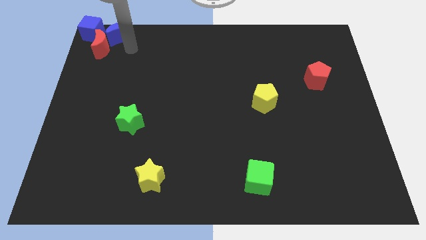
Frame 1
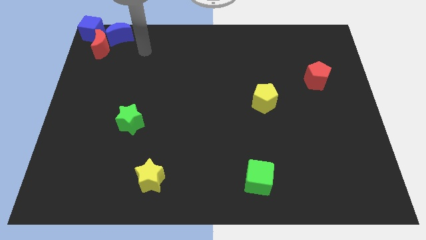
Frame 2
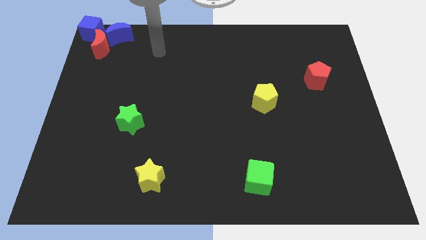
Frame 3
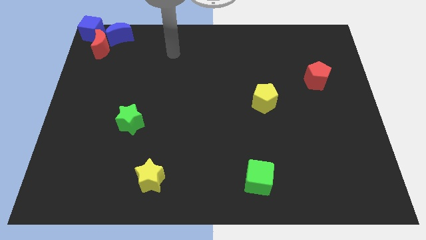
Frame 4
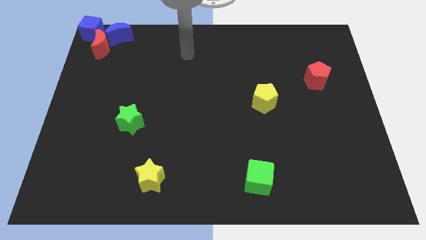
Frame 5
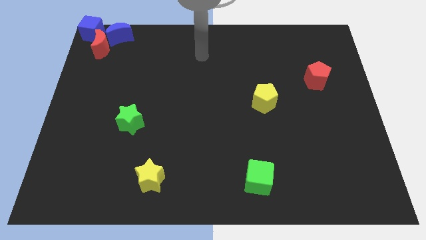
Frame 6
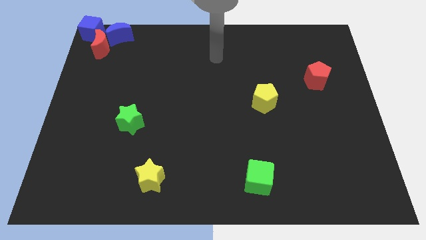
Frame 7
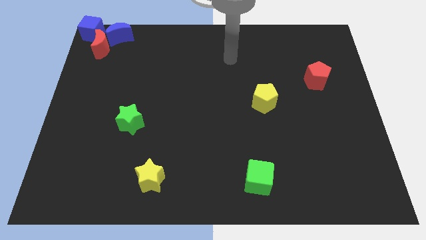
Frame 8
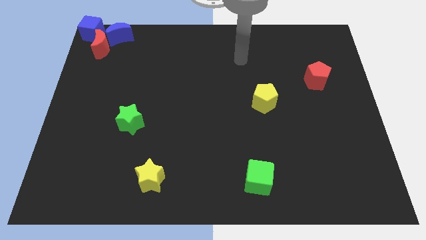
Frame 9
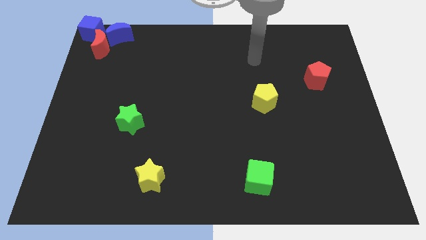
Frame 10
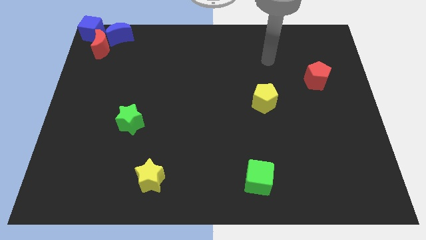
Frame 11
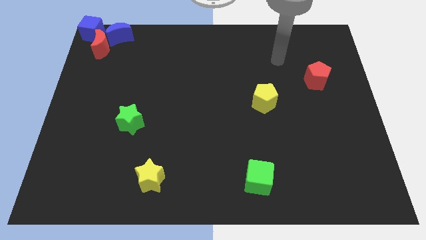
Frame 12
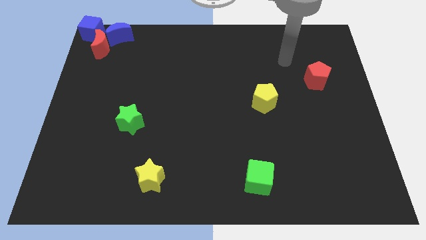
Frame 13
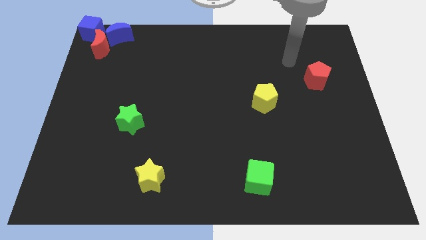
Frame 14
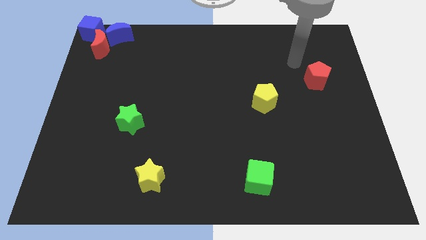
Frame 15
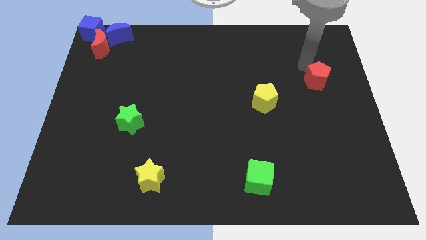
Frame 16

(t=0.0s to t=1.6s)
move the arm towards the red pentagon

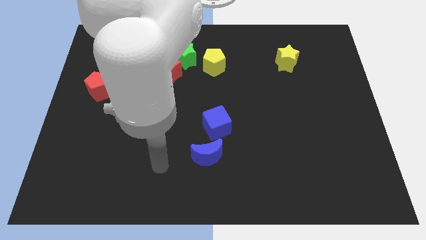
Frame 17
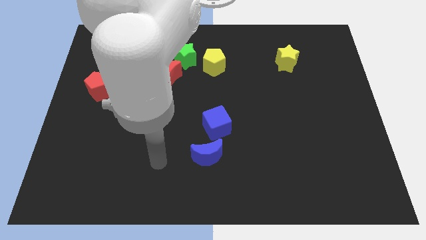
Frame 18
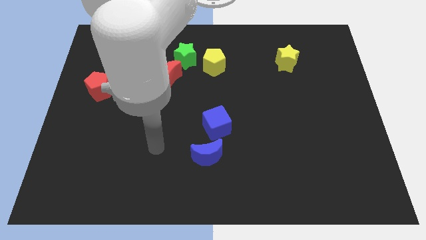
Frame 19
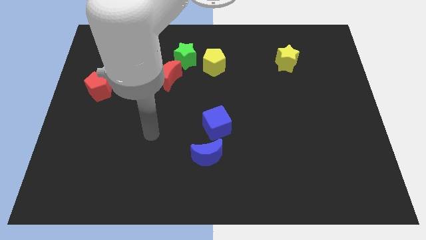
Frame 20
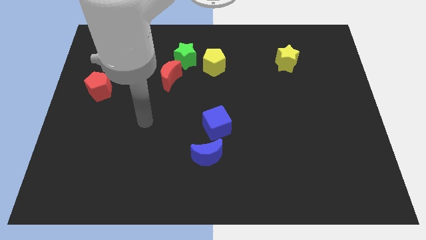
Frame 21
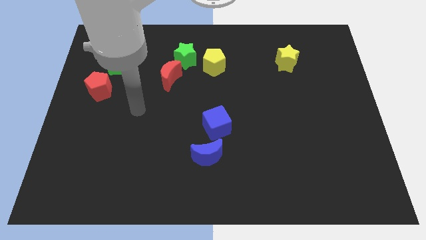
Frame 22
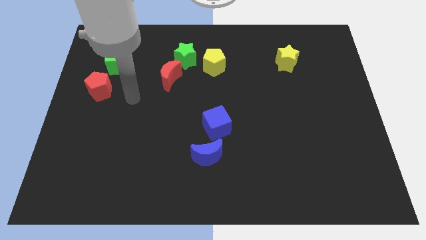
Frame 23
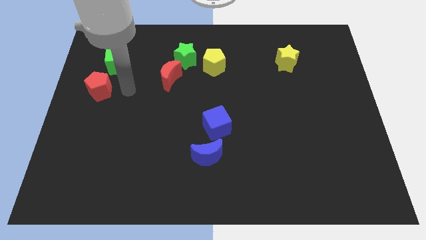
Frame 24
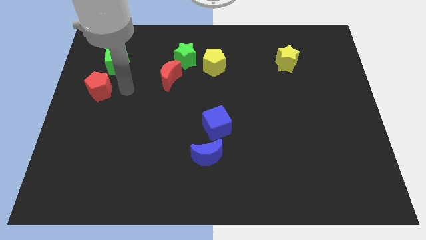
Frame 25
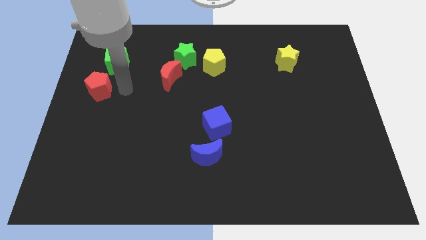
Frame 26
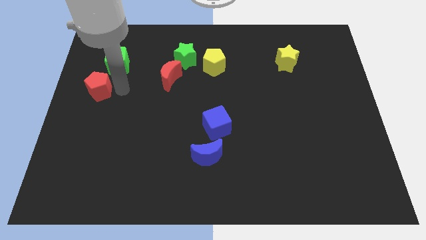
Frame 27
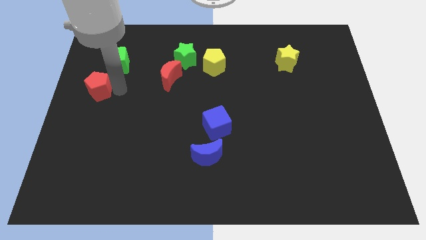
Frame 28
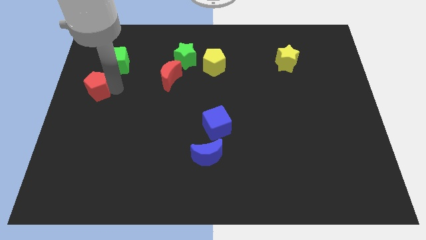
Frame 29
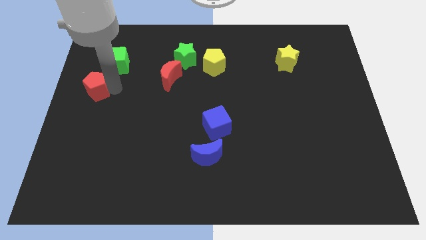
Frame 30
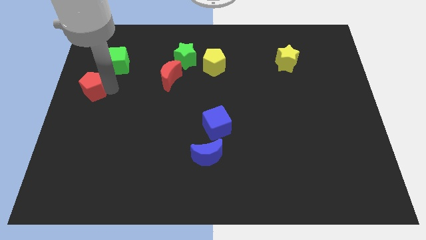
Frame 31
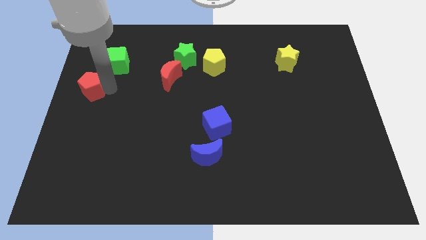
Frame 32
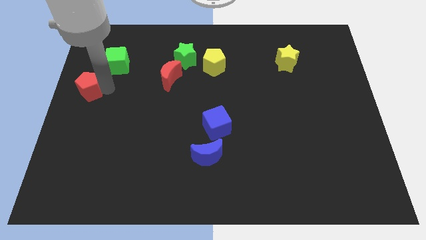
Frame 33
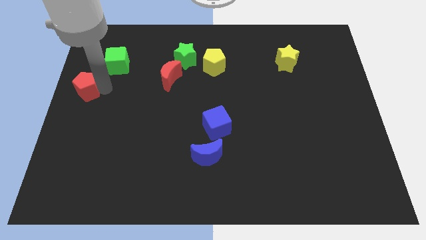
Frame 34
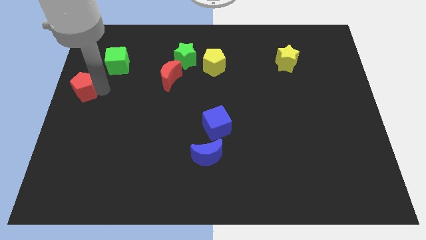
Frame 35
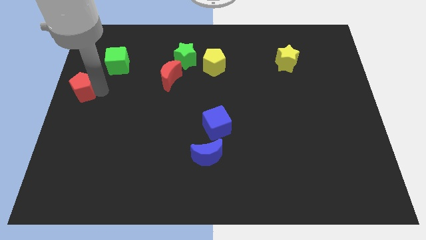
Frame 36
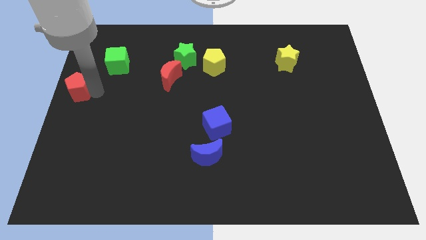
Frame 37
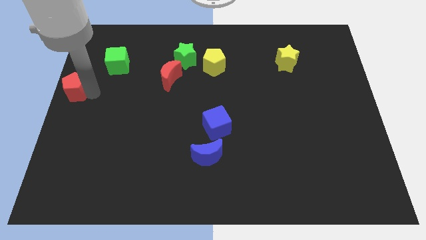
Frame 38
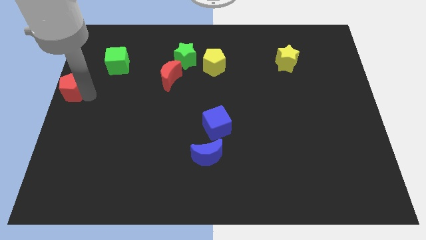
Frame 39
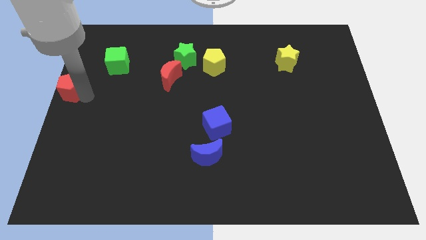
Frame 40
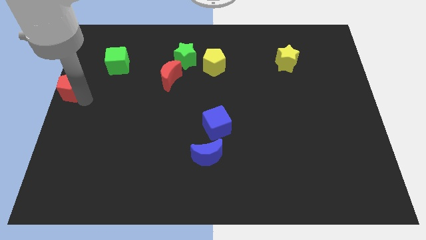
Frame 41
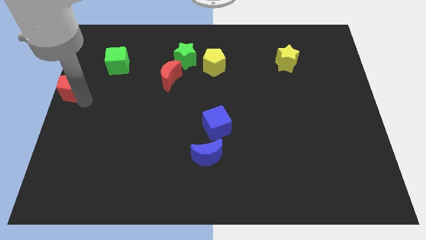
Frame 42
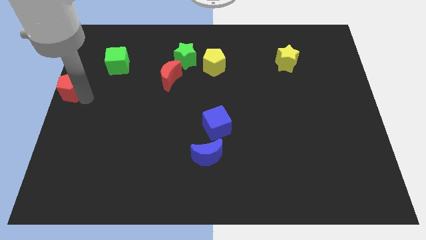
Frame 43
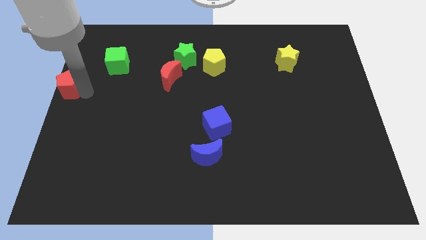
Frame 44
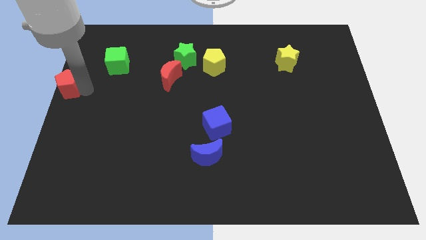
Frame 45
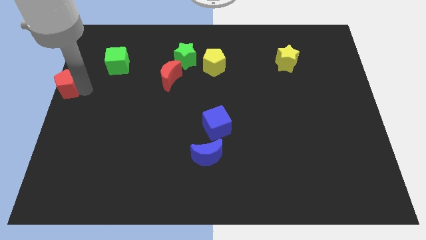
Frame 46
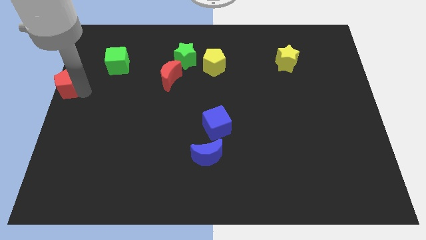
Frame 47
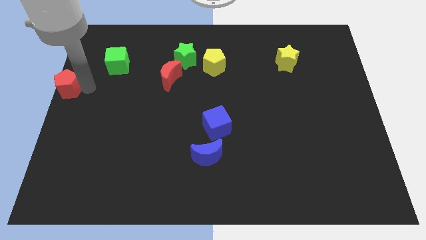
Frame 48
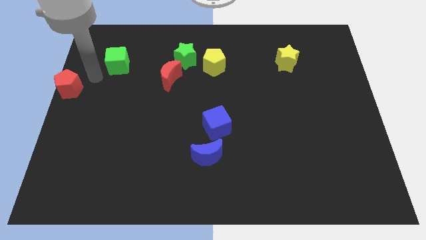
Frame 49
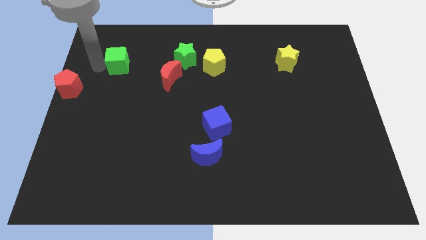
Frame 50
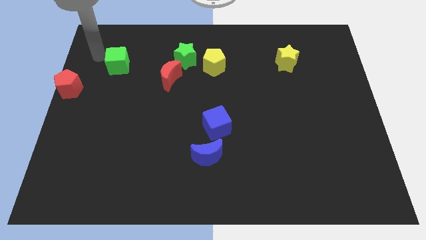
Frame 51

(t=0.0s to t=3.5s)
move the red pentagon to the left side of the board

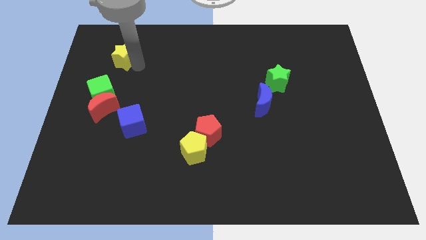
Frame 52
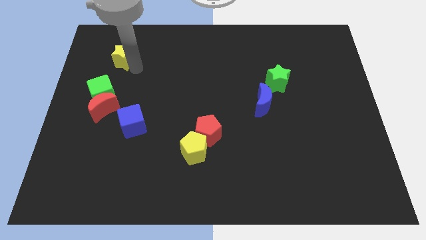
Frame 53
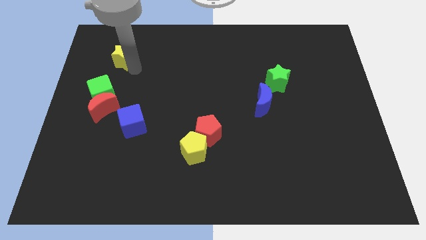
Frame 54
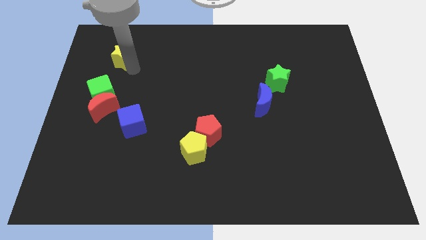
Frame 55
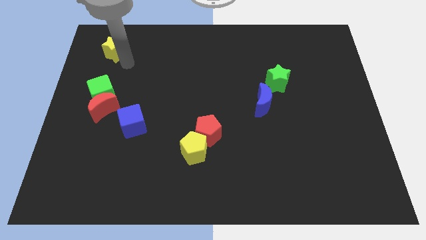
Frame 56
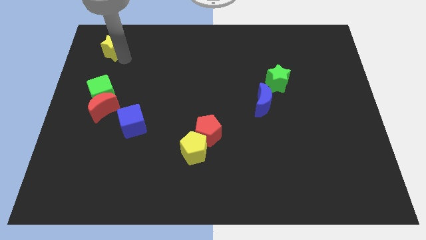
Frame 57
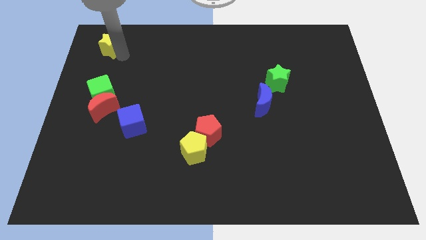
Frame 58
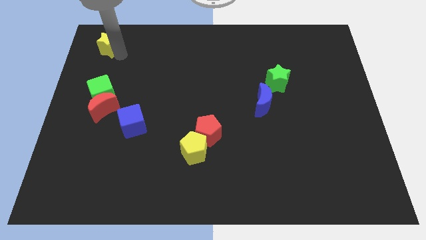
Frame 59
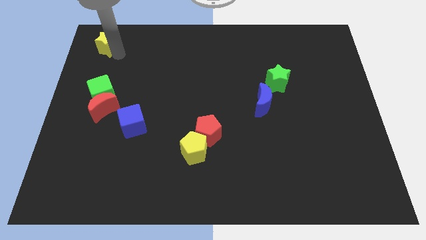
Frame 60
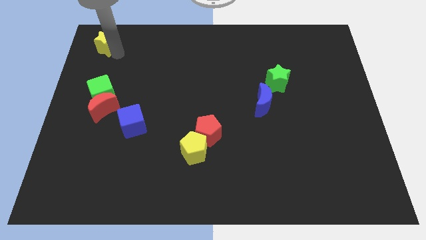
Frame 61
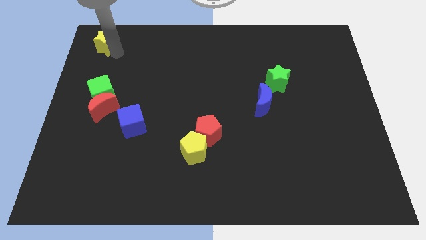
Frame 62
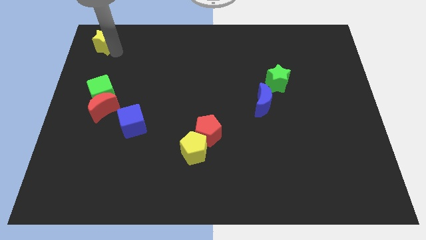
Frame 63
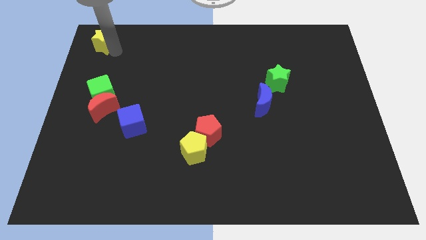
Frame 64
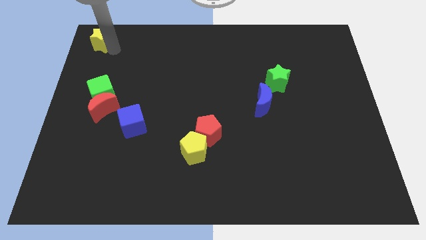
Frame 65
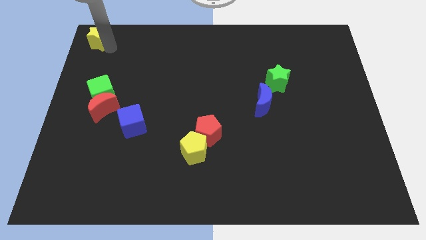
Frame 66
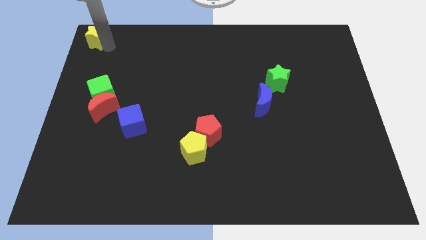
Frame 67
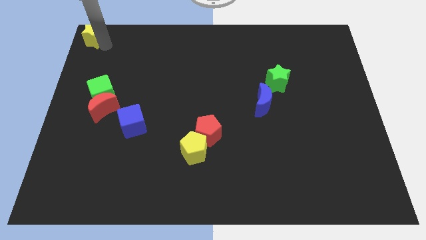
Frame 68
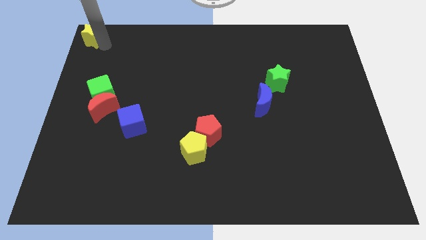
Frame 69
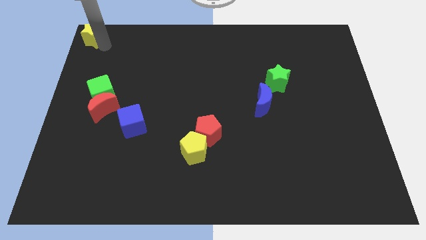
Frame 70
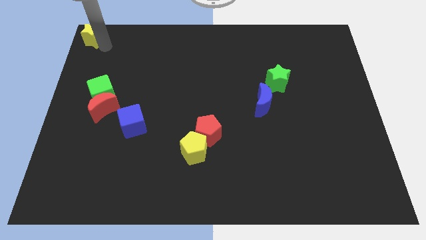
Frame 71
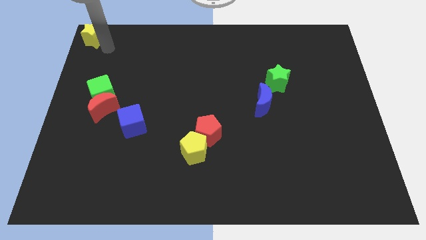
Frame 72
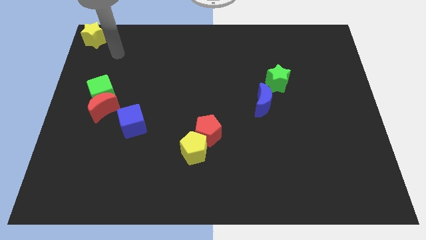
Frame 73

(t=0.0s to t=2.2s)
push the yellow star towards the top left corner of the board

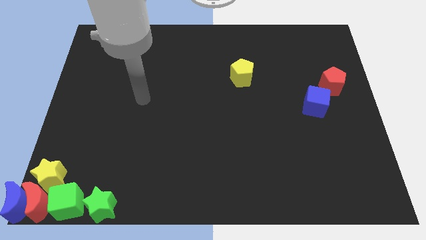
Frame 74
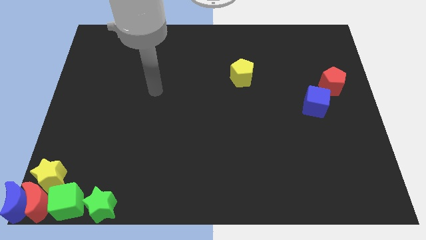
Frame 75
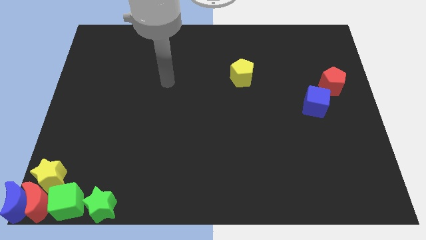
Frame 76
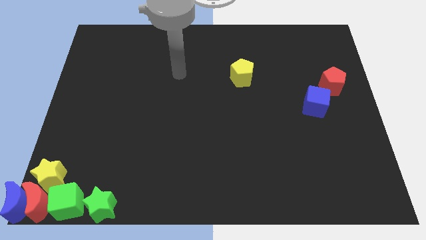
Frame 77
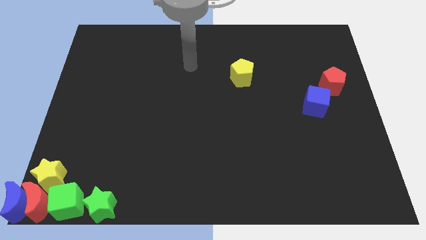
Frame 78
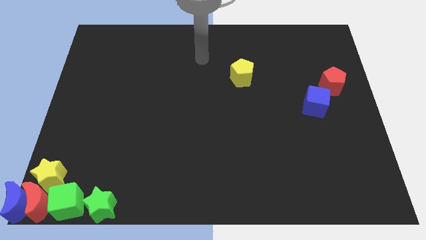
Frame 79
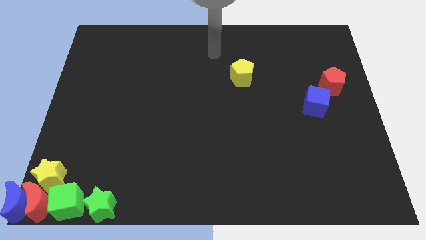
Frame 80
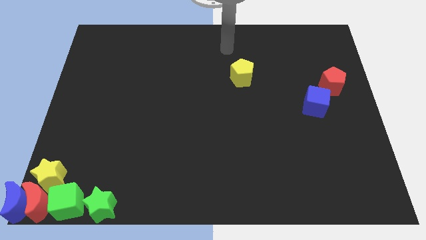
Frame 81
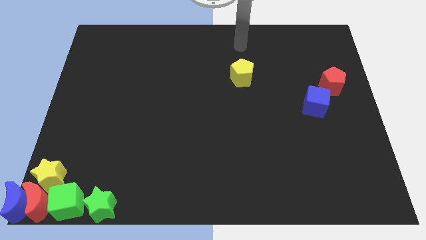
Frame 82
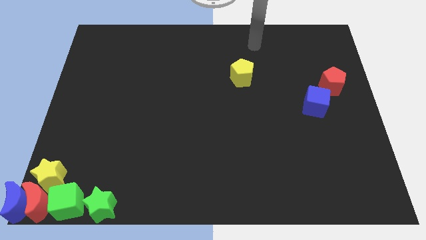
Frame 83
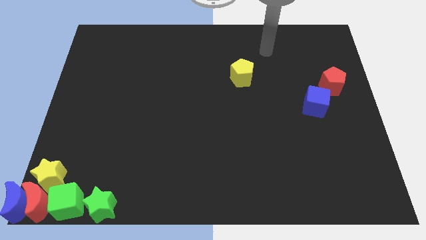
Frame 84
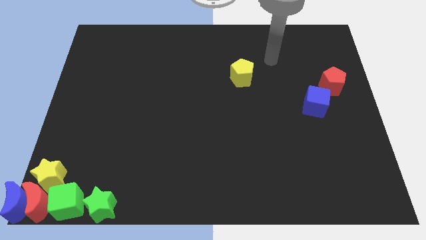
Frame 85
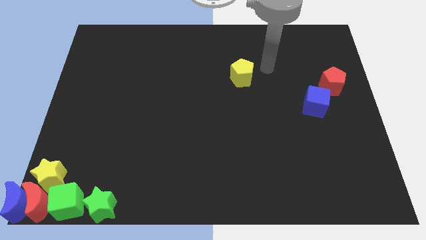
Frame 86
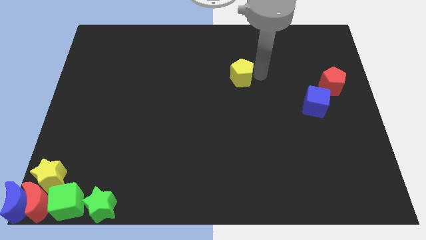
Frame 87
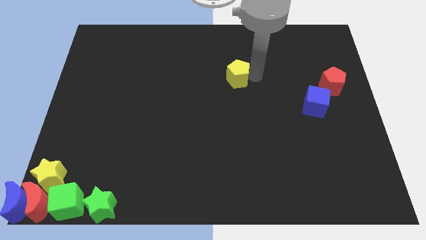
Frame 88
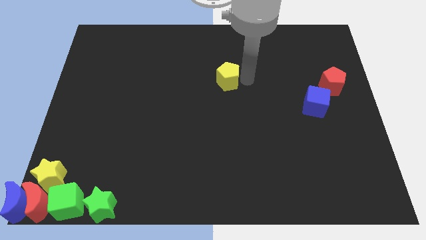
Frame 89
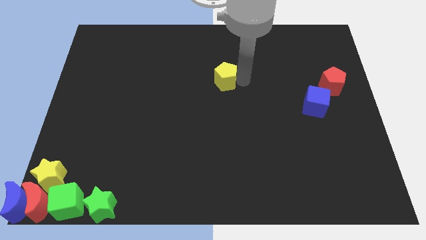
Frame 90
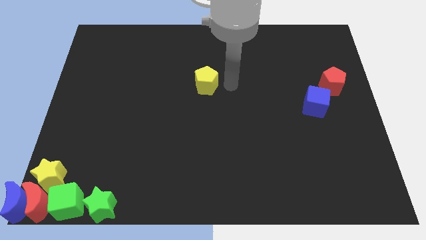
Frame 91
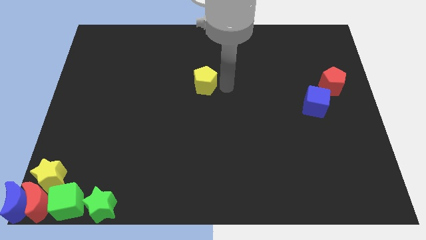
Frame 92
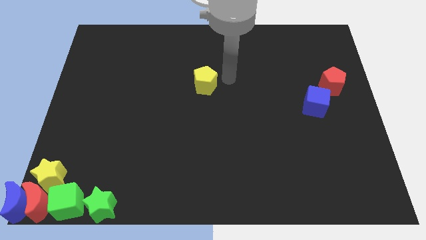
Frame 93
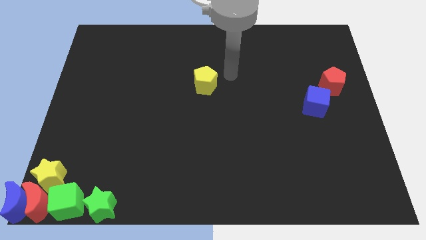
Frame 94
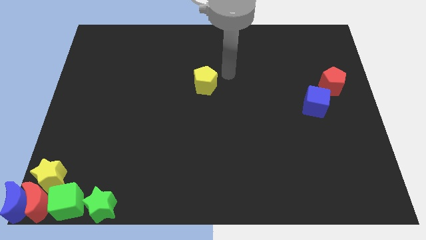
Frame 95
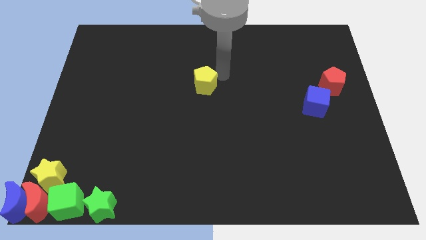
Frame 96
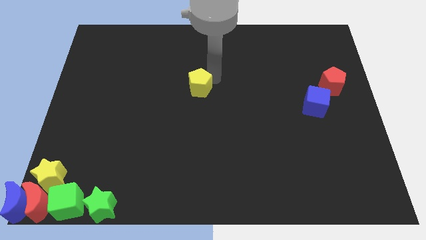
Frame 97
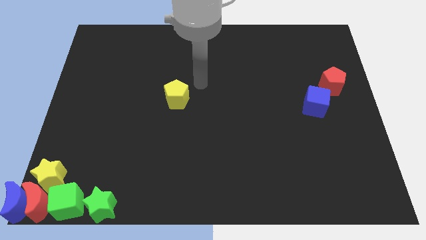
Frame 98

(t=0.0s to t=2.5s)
place the yellow pentagon left to the blue cube
